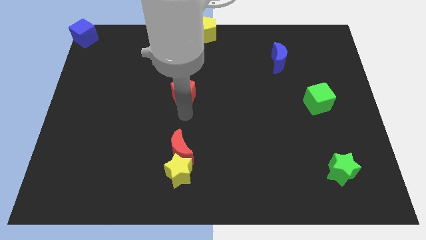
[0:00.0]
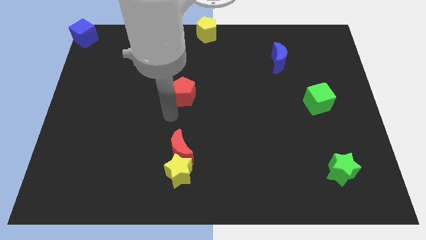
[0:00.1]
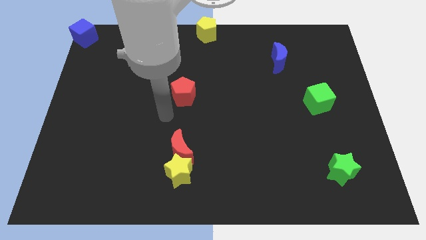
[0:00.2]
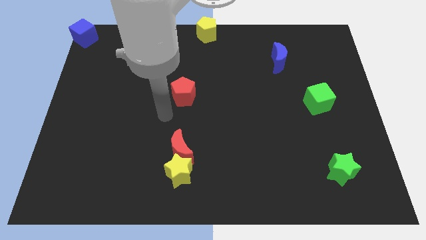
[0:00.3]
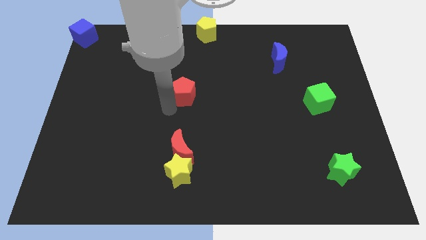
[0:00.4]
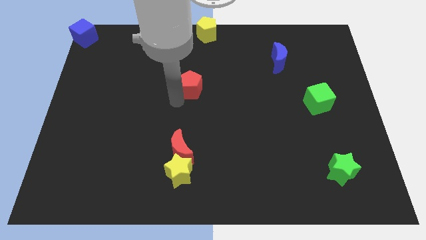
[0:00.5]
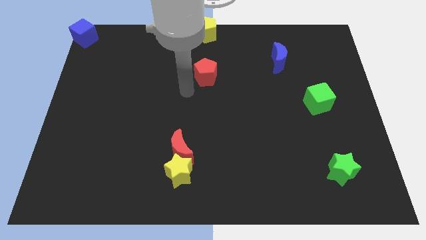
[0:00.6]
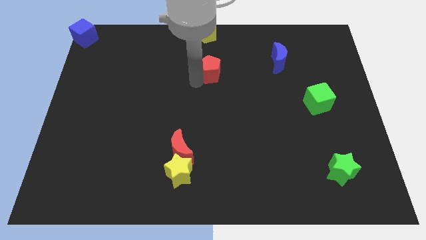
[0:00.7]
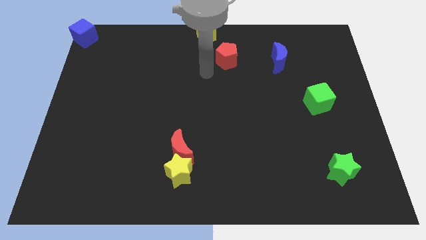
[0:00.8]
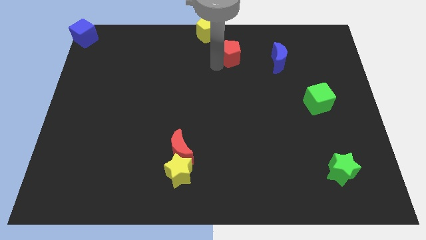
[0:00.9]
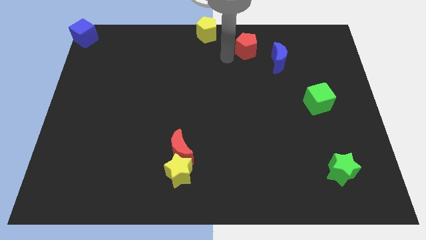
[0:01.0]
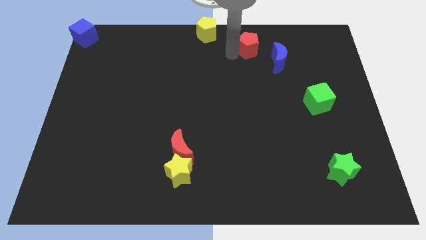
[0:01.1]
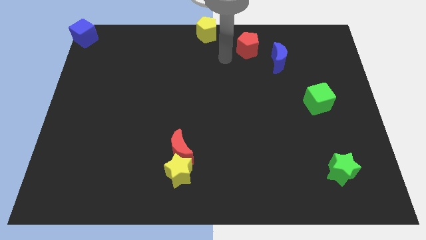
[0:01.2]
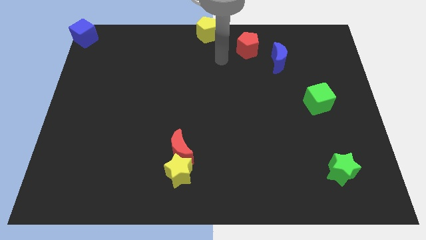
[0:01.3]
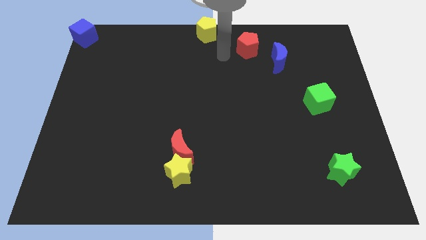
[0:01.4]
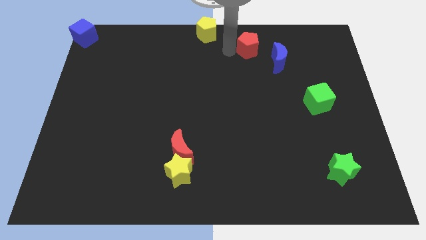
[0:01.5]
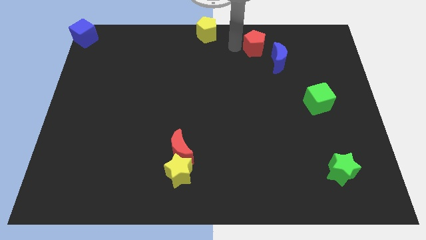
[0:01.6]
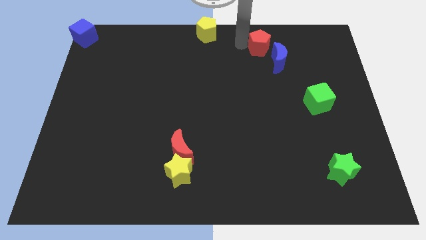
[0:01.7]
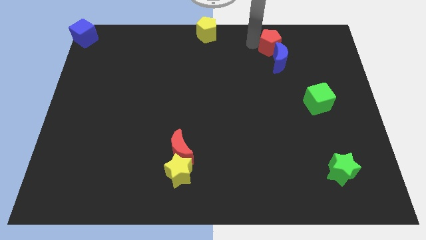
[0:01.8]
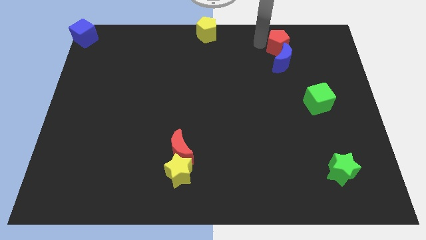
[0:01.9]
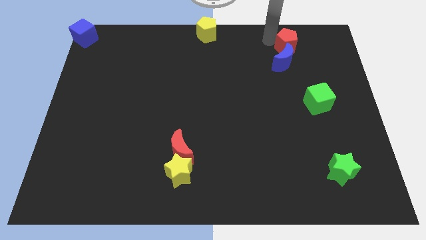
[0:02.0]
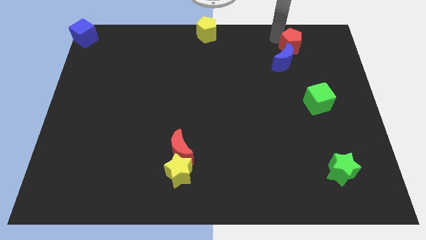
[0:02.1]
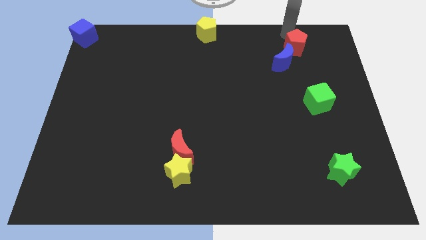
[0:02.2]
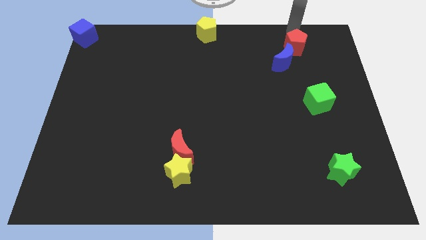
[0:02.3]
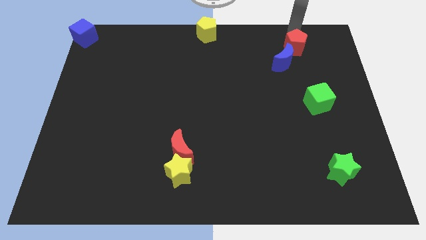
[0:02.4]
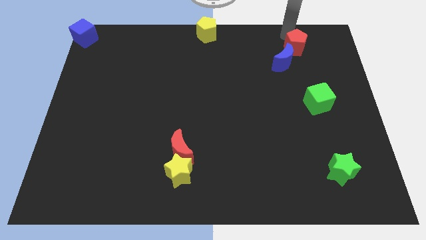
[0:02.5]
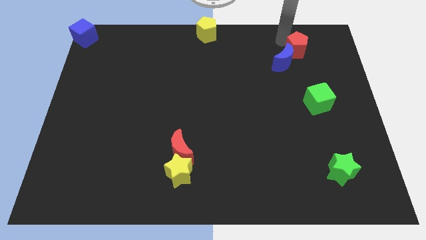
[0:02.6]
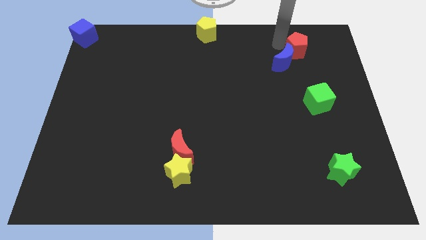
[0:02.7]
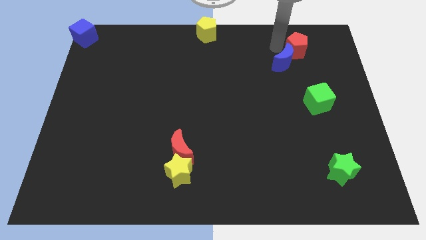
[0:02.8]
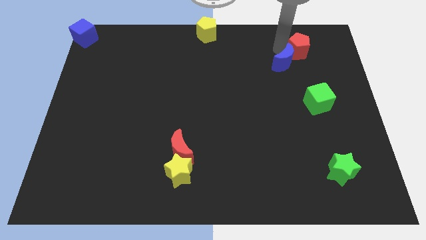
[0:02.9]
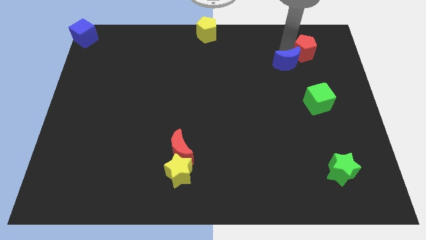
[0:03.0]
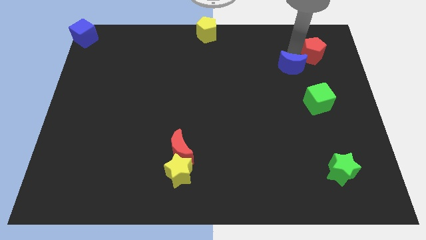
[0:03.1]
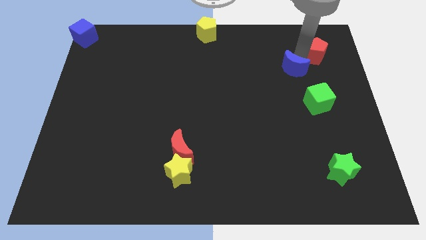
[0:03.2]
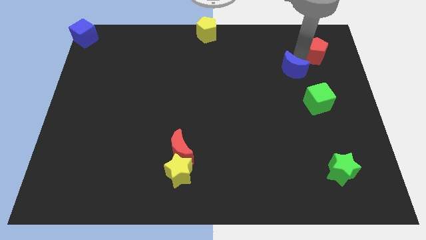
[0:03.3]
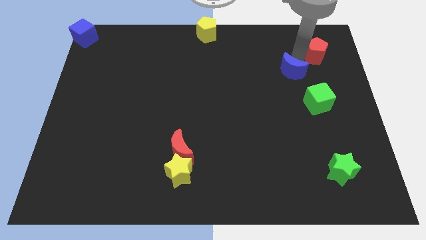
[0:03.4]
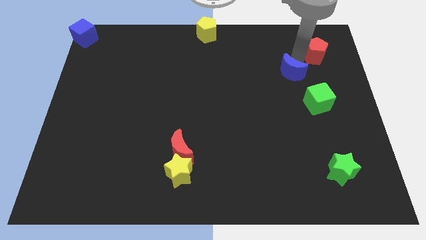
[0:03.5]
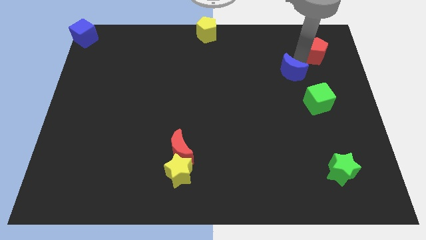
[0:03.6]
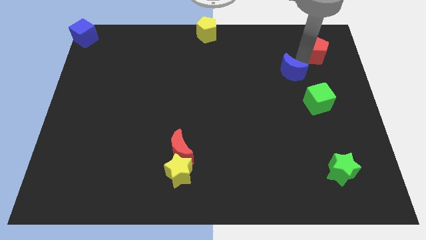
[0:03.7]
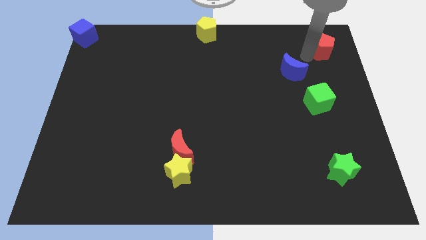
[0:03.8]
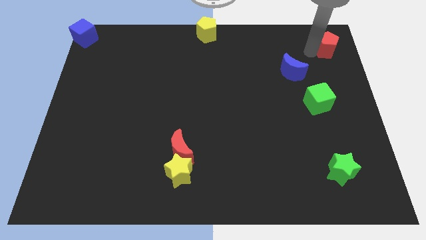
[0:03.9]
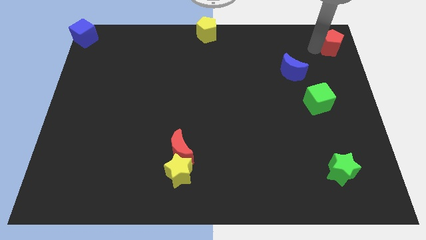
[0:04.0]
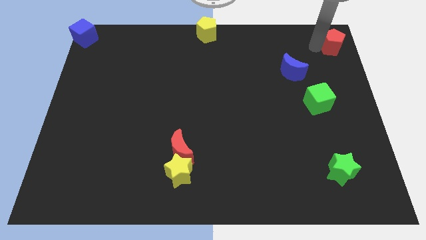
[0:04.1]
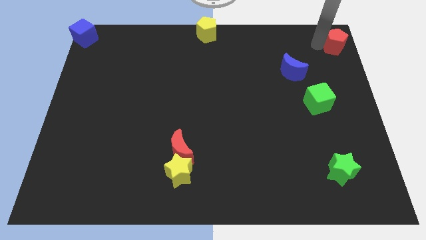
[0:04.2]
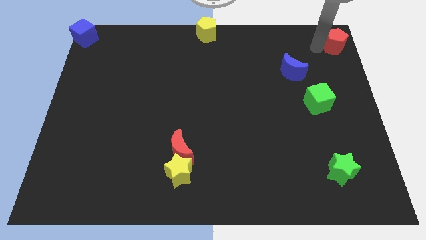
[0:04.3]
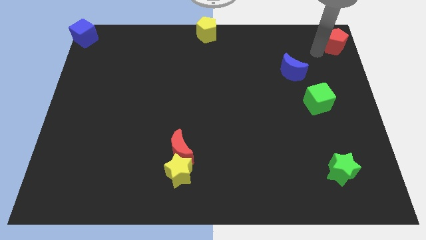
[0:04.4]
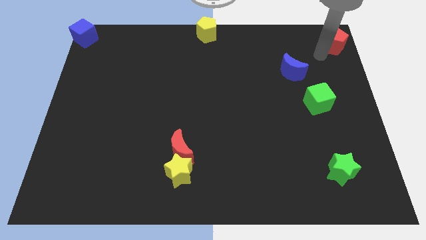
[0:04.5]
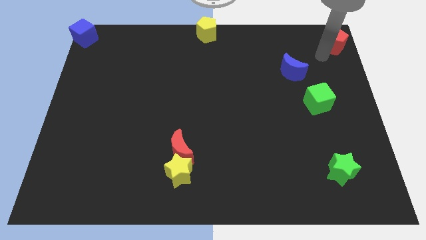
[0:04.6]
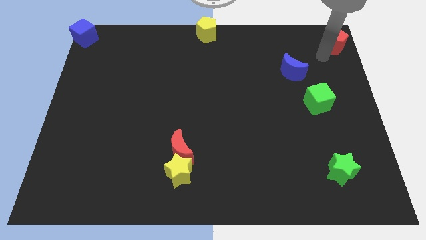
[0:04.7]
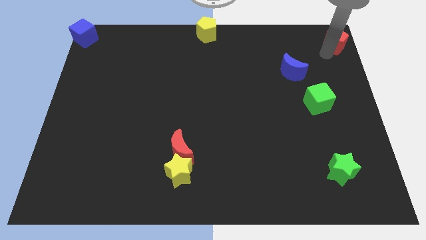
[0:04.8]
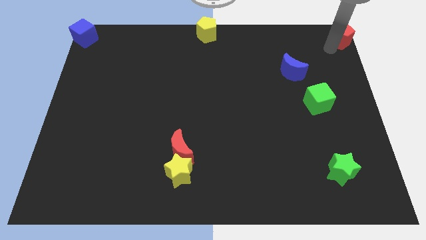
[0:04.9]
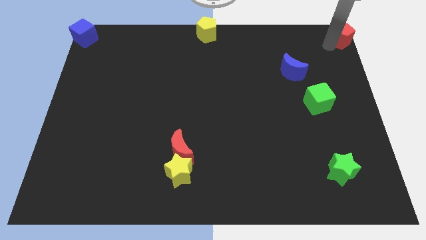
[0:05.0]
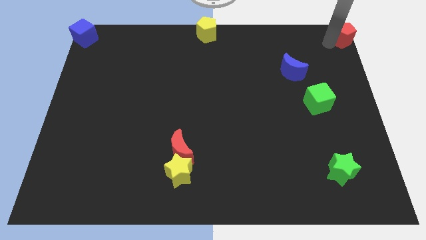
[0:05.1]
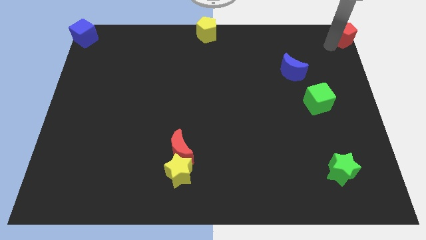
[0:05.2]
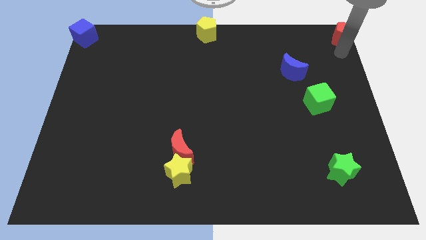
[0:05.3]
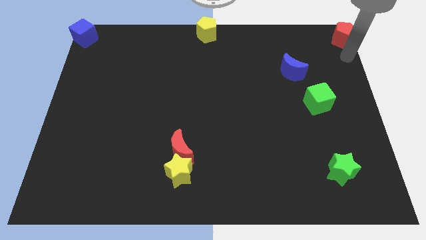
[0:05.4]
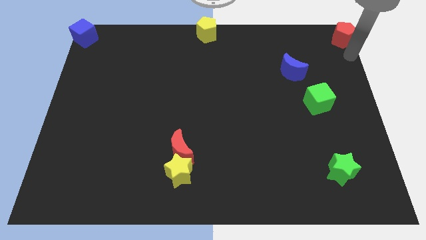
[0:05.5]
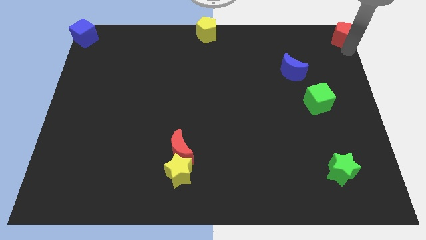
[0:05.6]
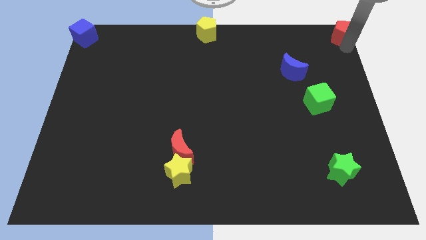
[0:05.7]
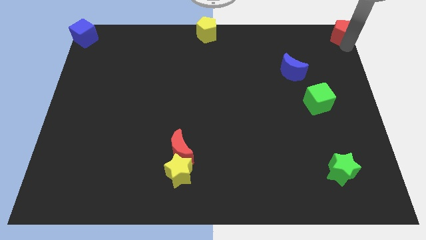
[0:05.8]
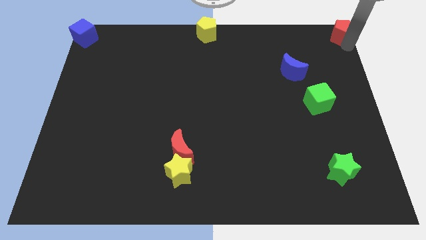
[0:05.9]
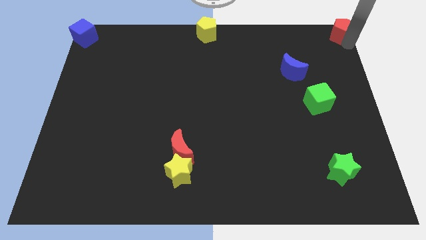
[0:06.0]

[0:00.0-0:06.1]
slide red pentagon to the top right of the blue moon

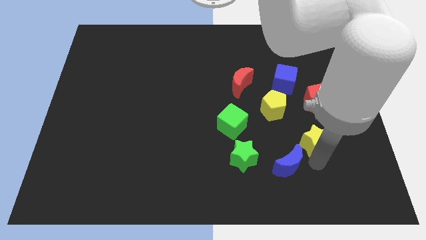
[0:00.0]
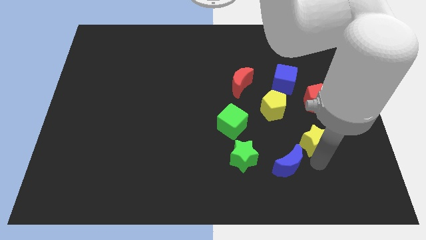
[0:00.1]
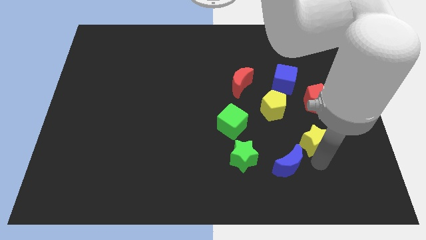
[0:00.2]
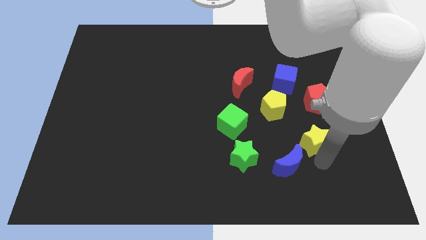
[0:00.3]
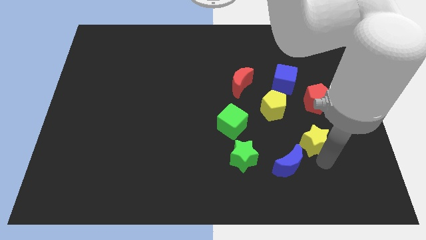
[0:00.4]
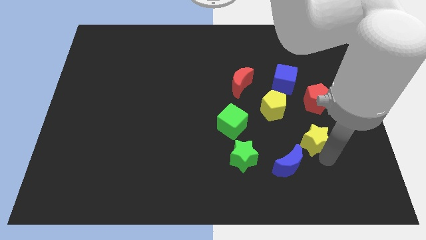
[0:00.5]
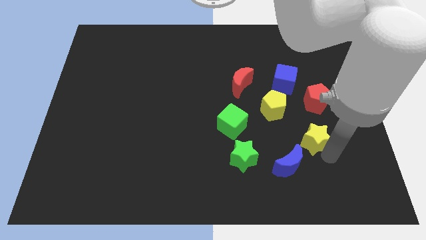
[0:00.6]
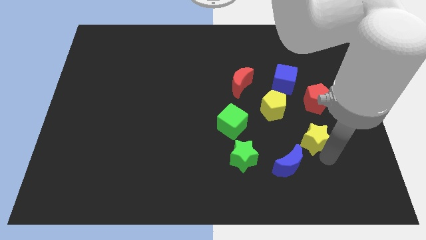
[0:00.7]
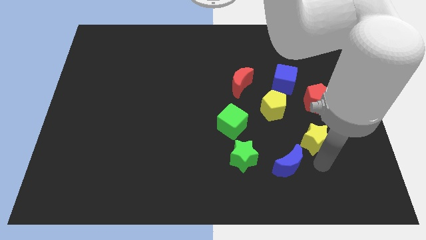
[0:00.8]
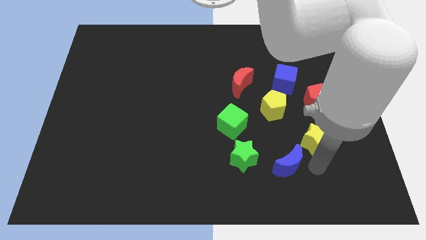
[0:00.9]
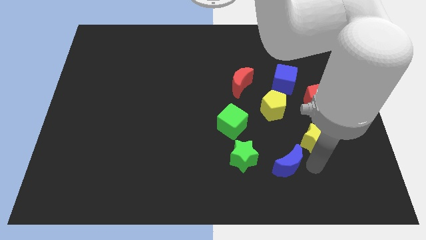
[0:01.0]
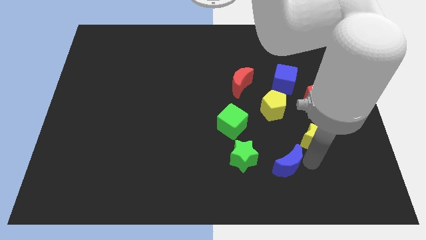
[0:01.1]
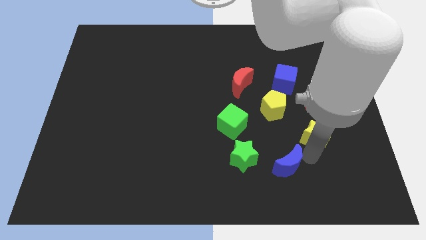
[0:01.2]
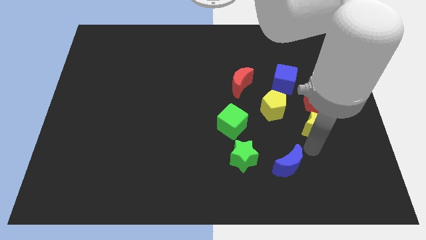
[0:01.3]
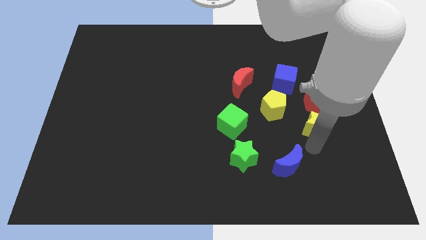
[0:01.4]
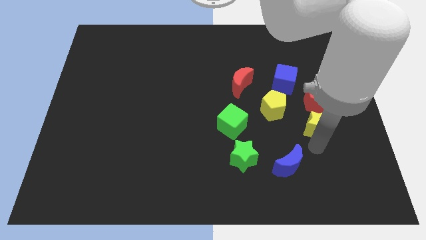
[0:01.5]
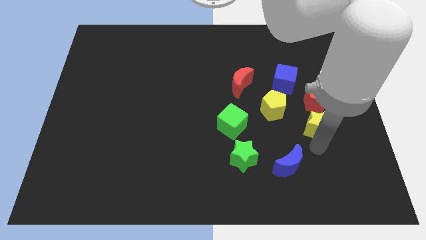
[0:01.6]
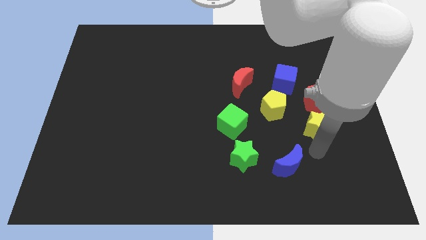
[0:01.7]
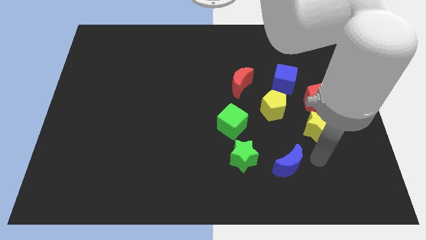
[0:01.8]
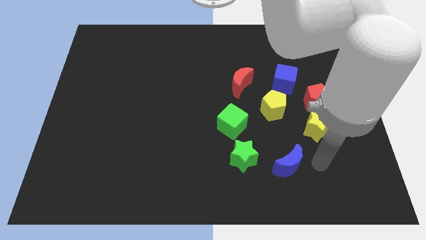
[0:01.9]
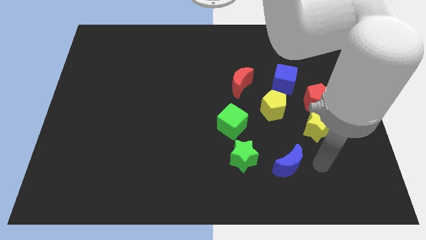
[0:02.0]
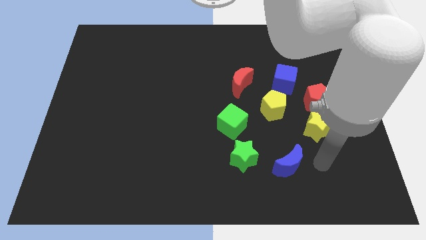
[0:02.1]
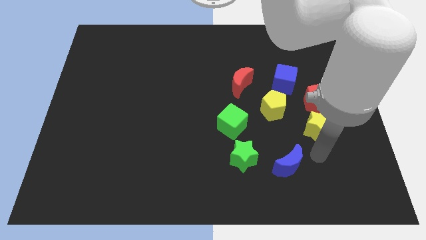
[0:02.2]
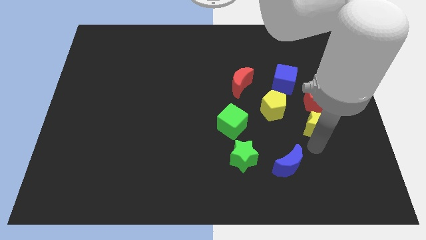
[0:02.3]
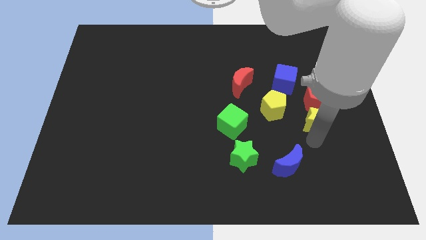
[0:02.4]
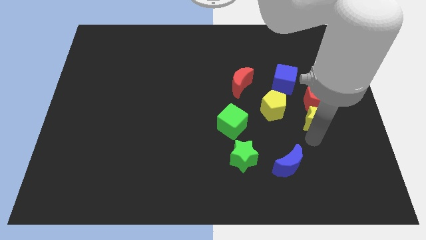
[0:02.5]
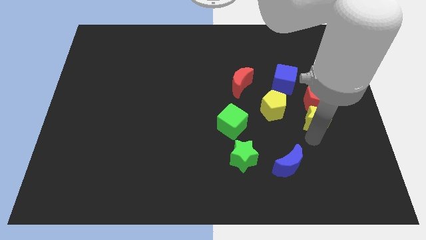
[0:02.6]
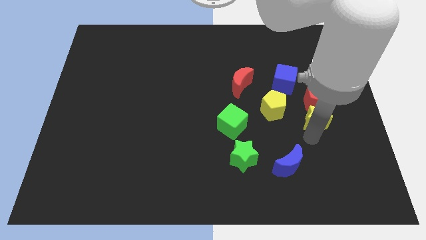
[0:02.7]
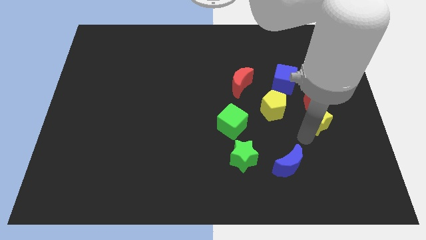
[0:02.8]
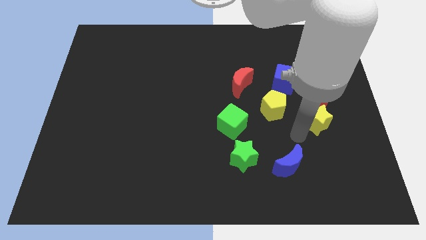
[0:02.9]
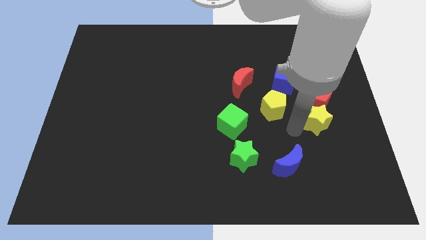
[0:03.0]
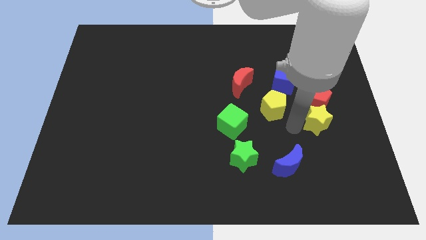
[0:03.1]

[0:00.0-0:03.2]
push the yellow star towards the red pentagon
